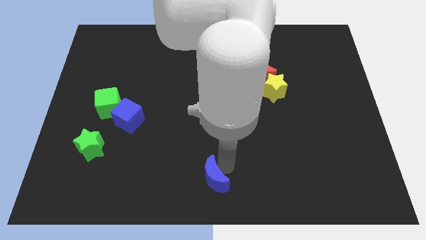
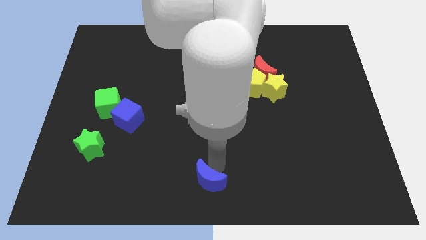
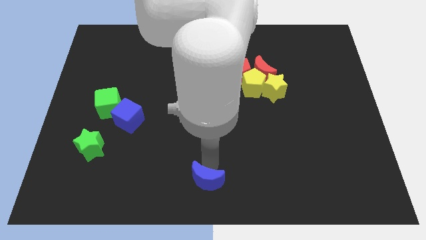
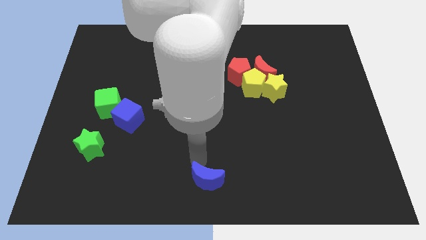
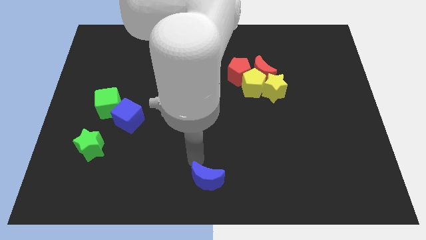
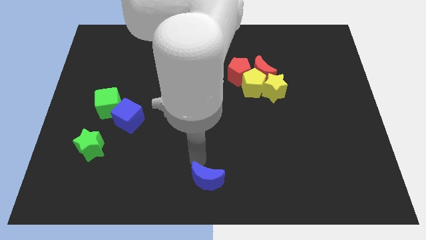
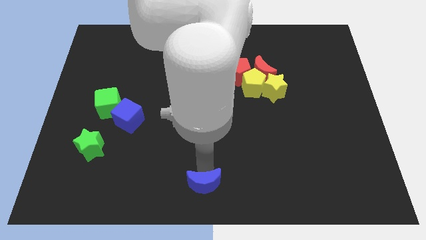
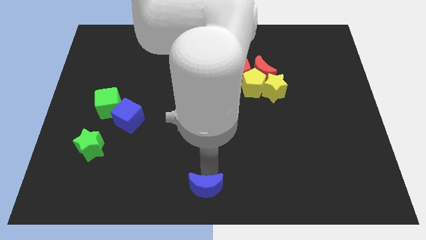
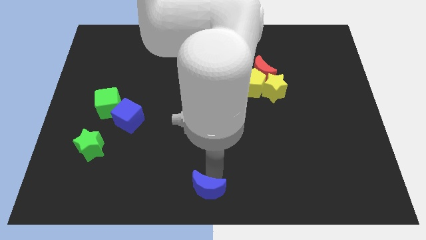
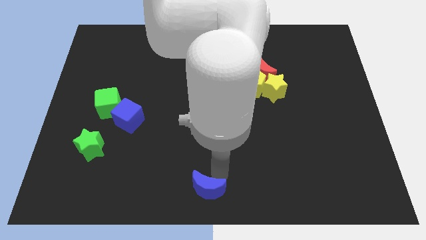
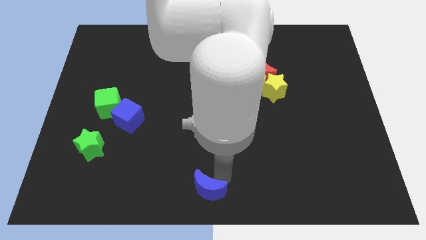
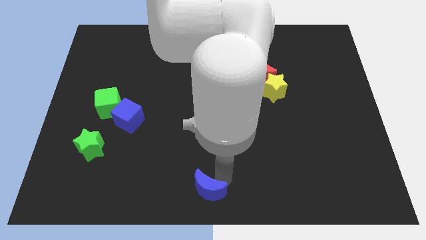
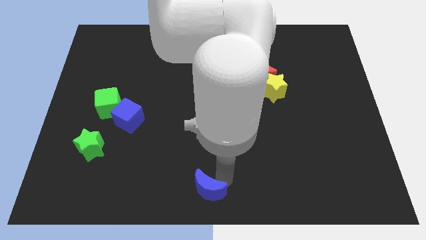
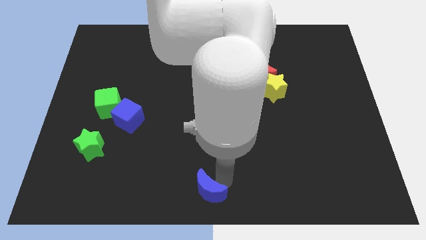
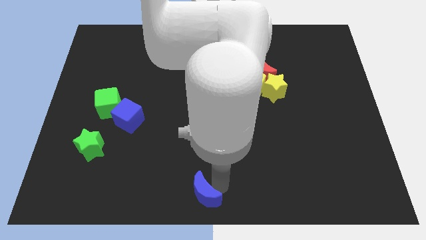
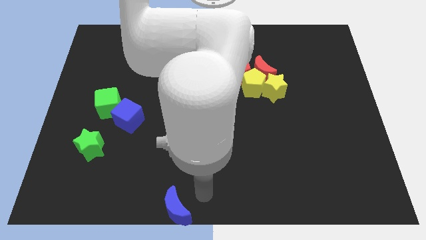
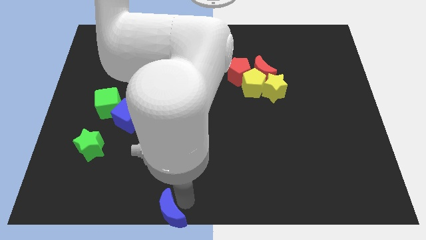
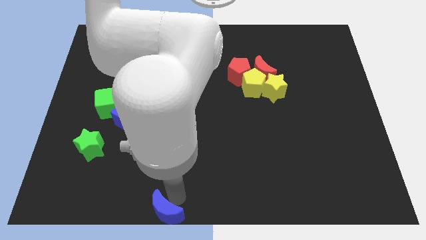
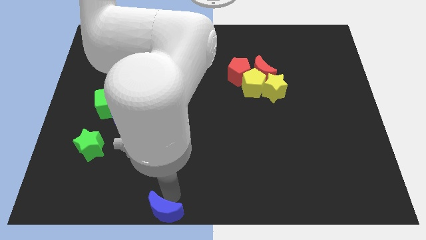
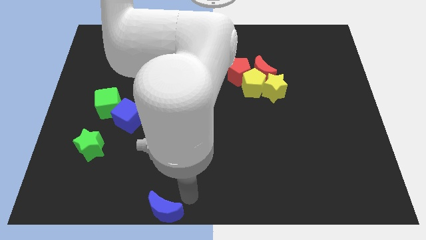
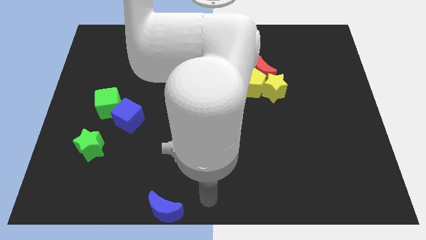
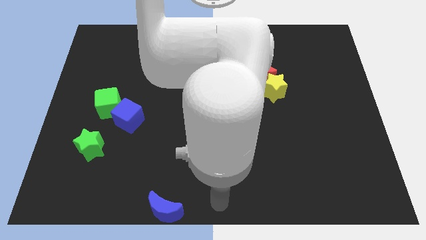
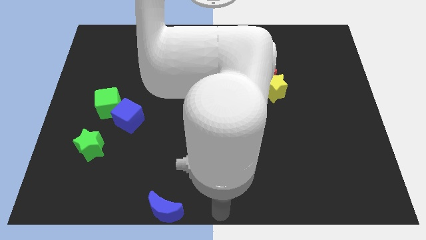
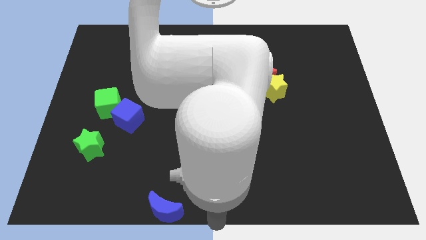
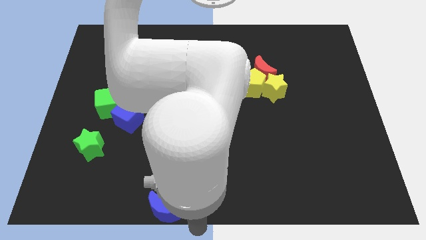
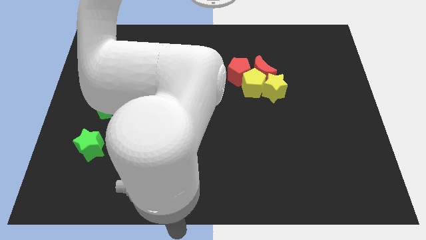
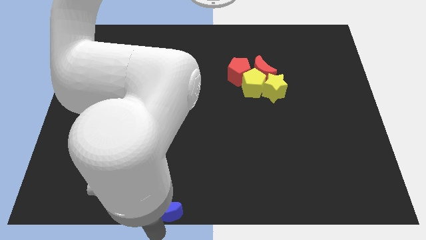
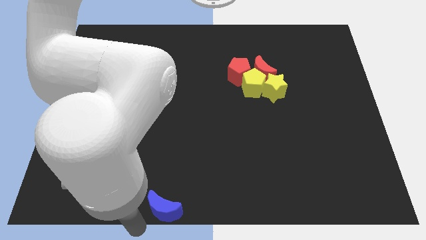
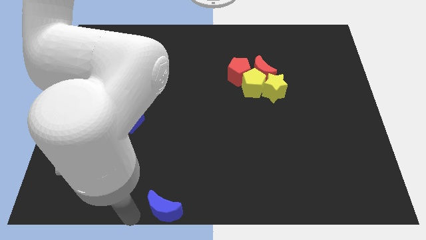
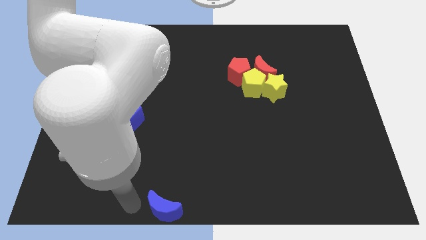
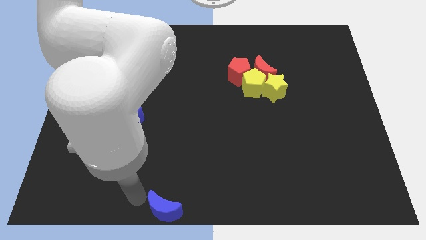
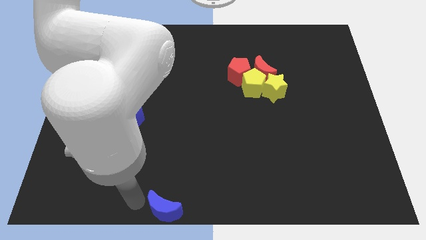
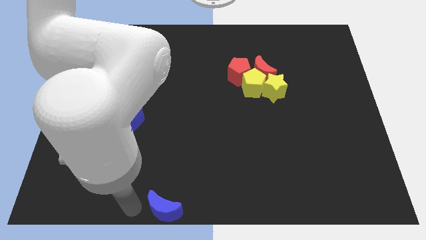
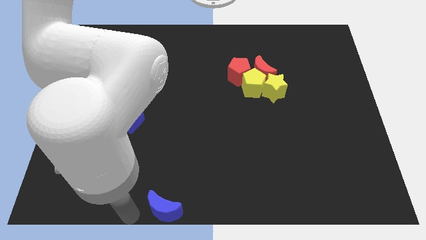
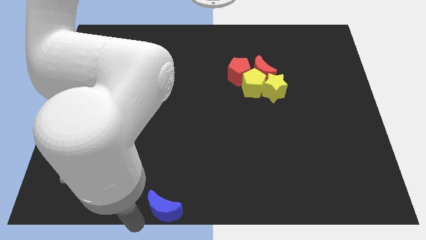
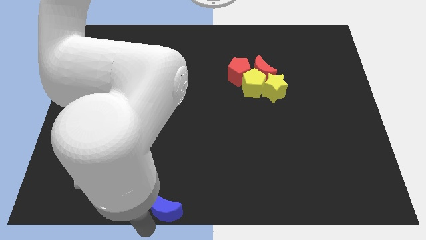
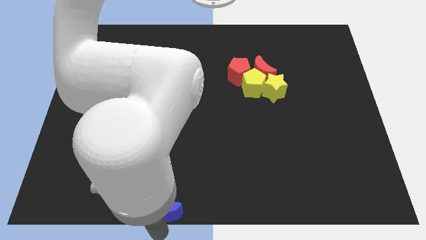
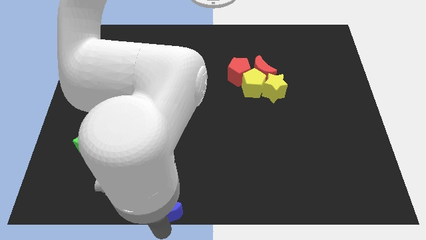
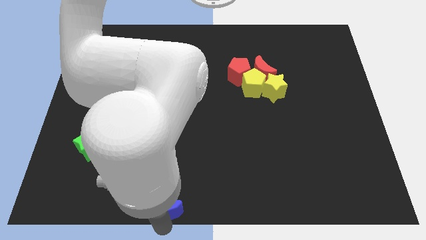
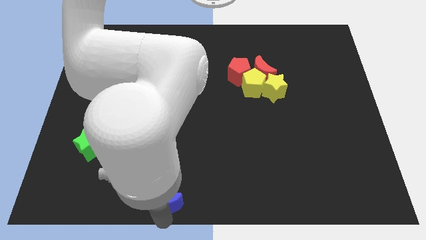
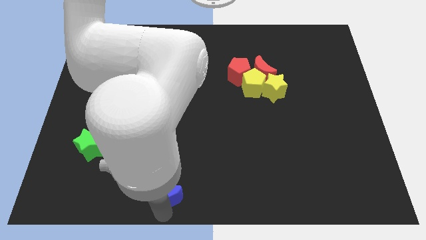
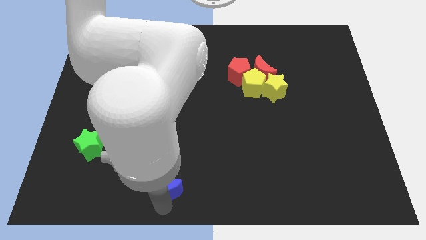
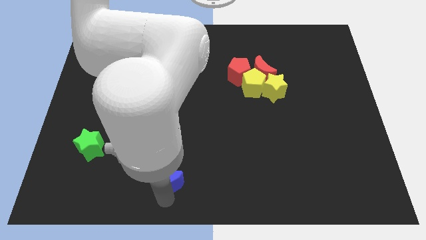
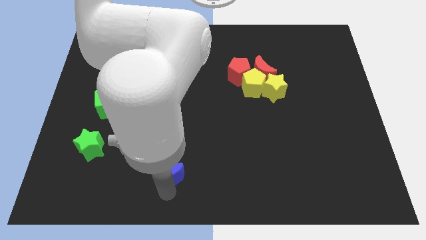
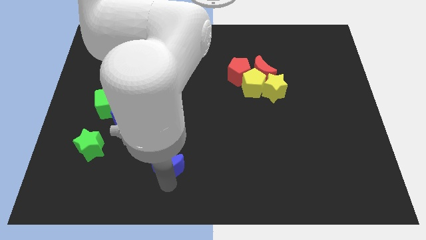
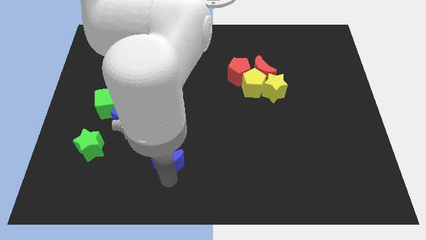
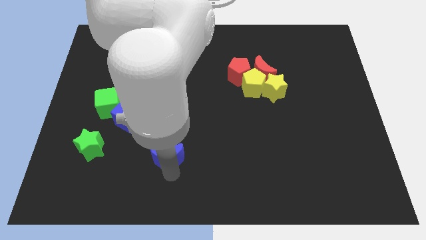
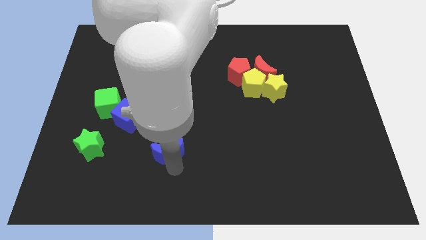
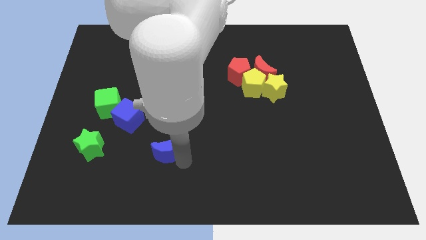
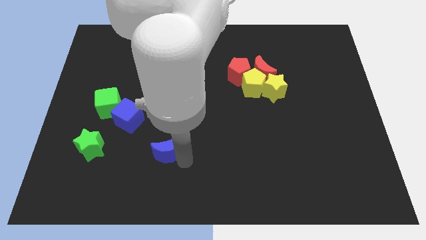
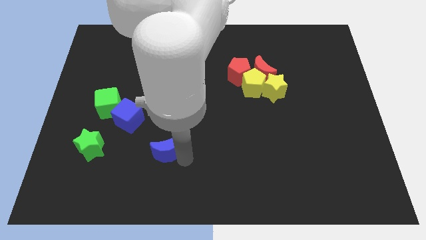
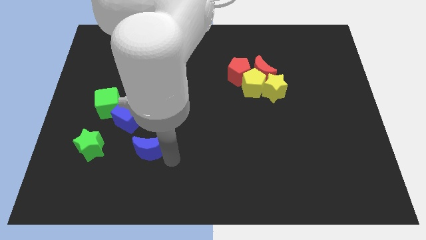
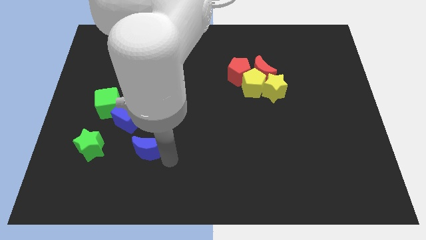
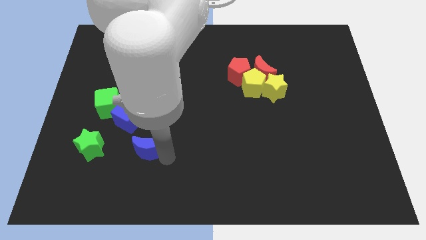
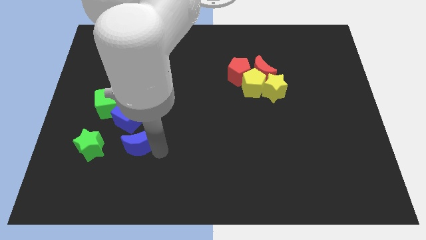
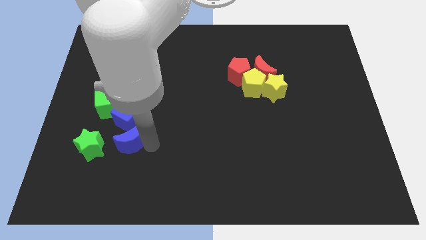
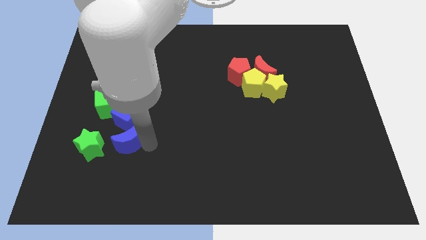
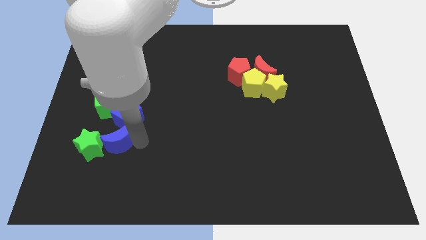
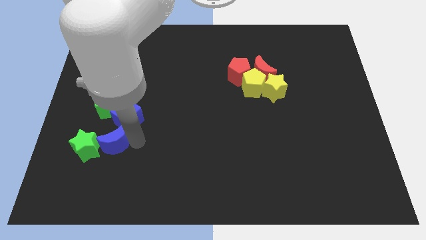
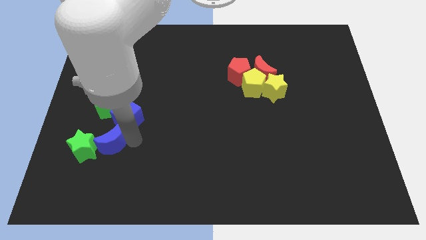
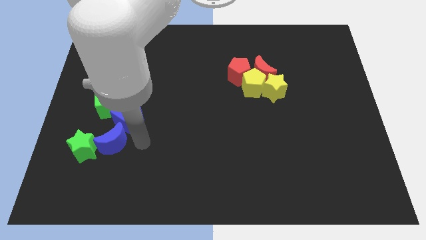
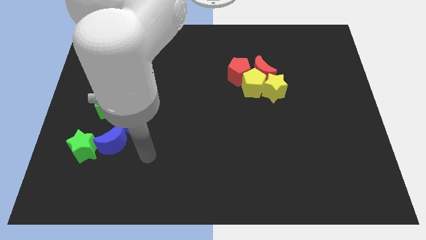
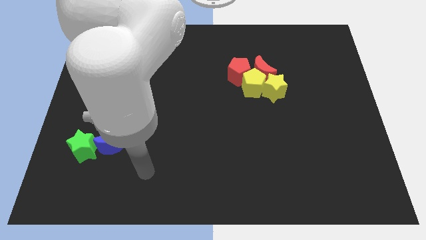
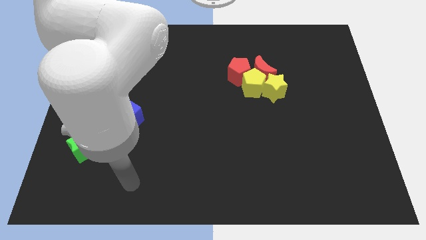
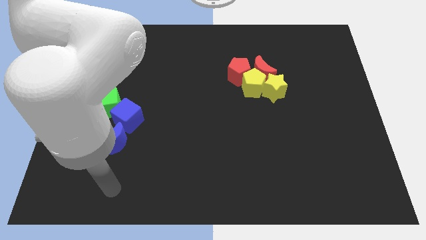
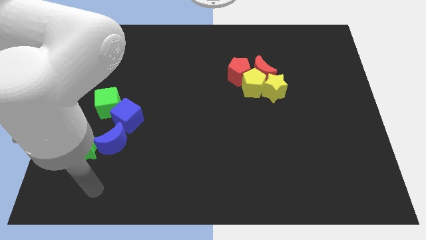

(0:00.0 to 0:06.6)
place the blue moon in between blue cube and green star

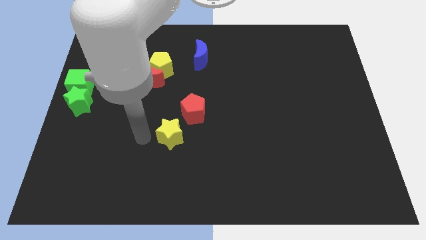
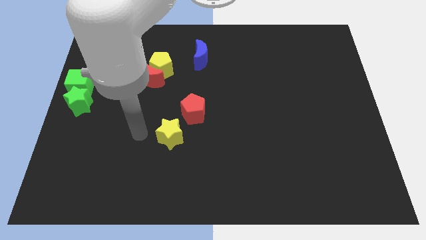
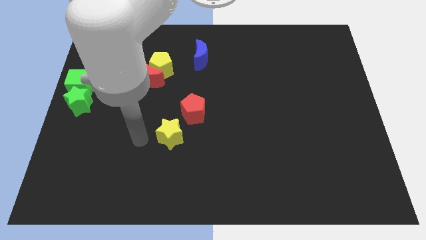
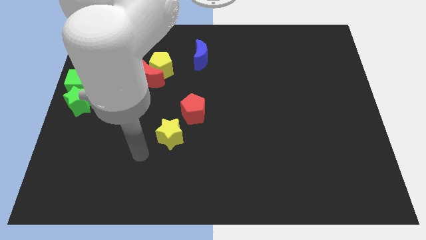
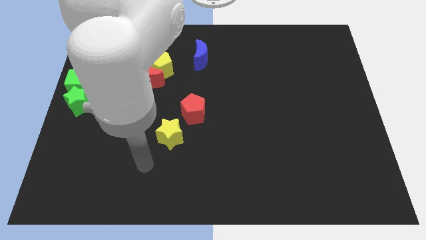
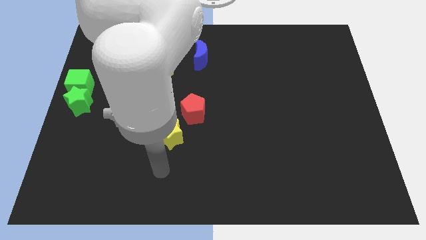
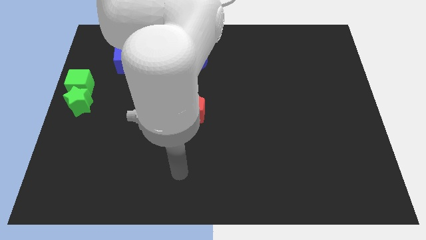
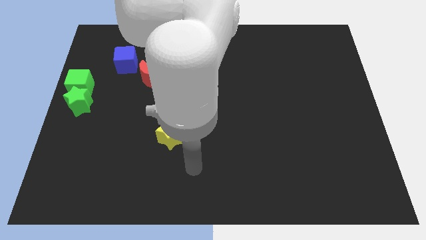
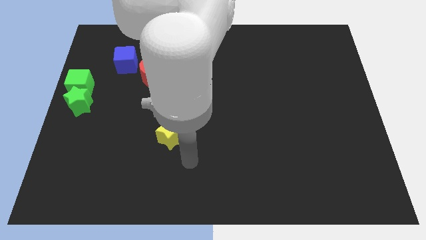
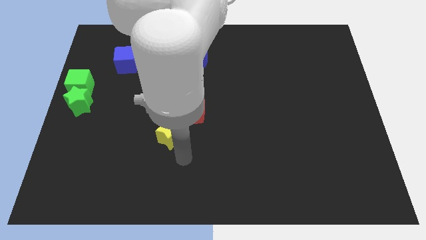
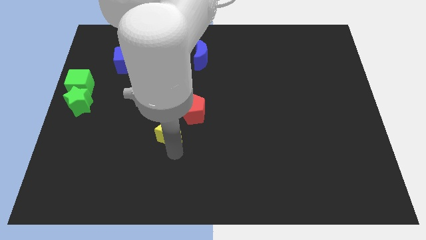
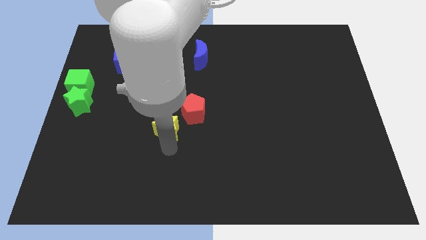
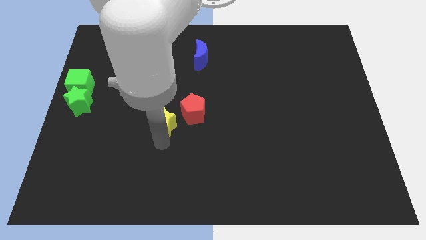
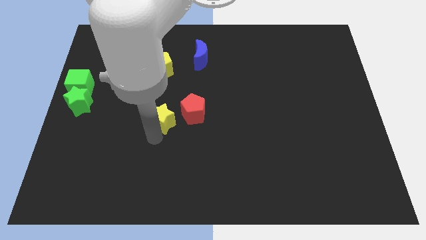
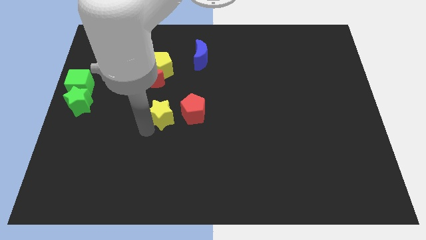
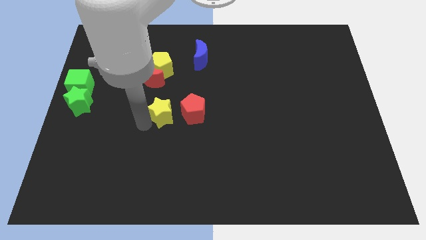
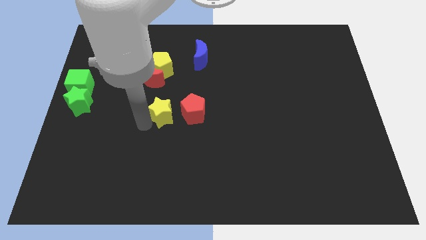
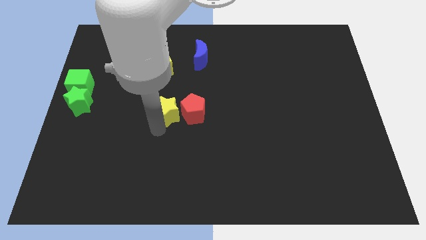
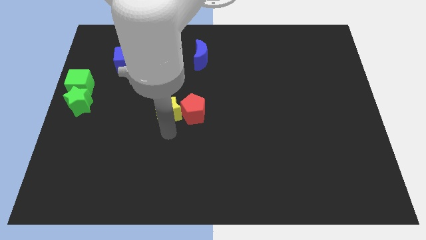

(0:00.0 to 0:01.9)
place the yellow star left to the red pentagon

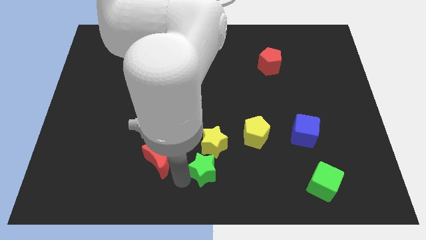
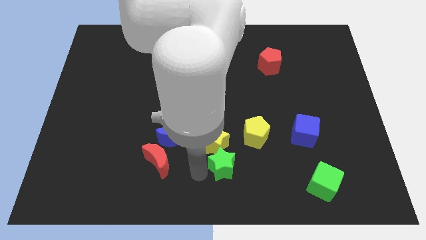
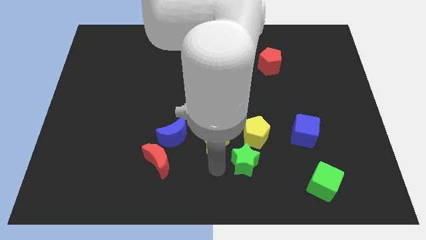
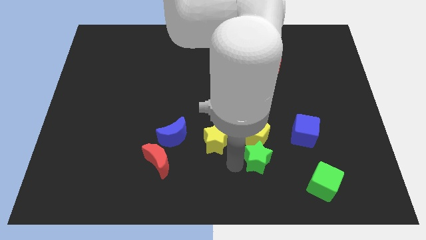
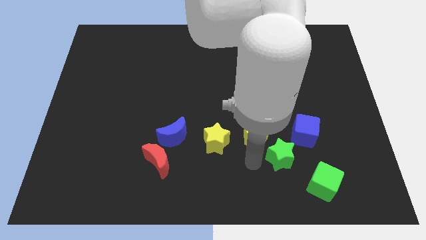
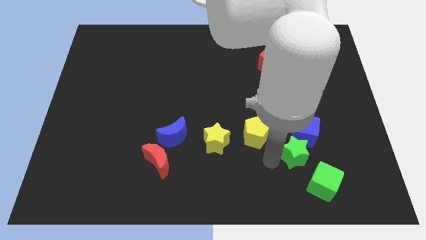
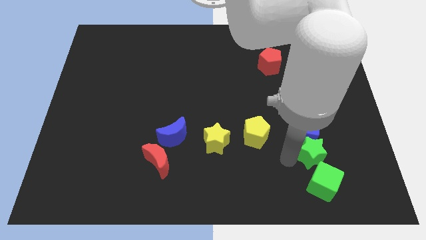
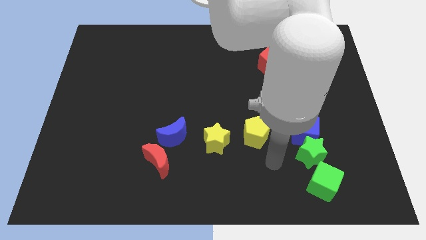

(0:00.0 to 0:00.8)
move the green star to the bottom of the blue cube
